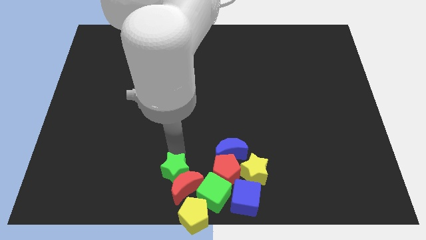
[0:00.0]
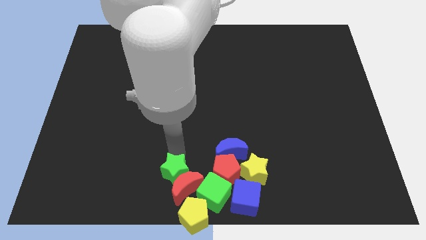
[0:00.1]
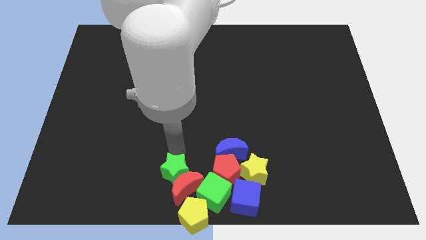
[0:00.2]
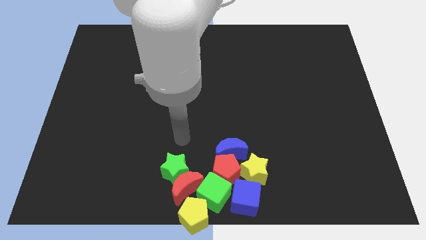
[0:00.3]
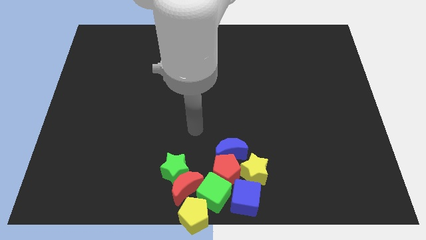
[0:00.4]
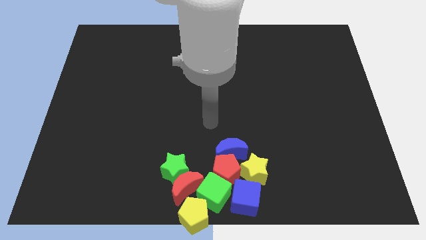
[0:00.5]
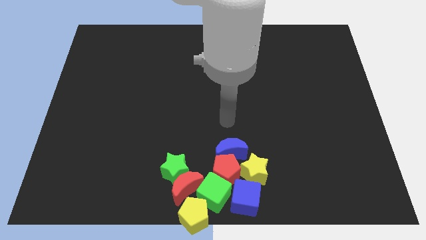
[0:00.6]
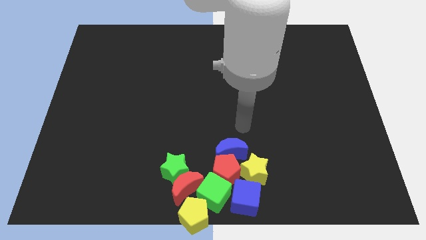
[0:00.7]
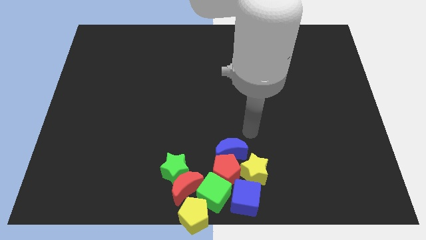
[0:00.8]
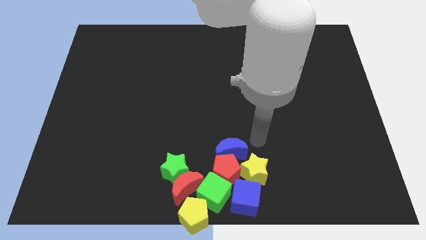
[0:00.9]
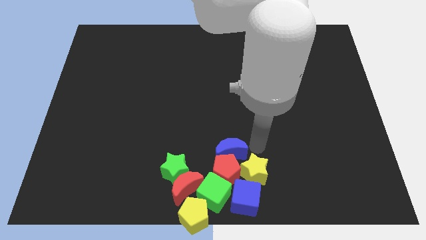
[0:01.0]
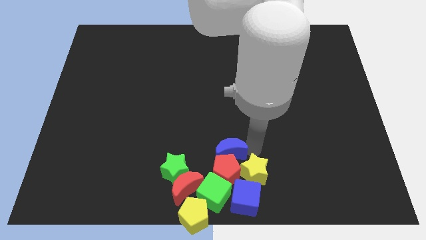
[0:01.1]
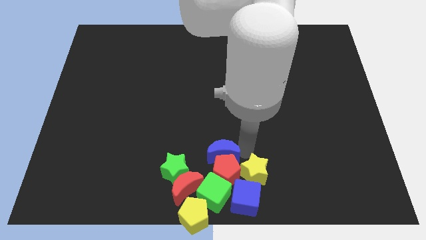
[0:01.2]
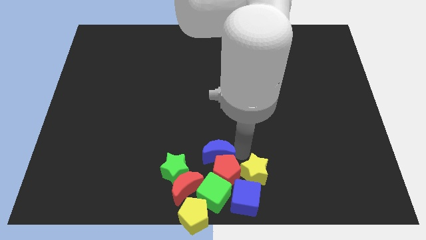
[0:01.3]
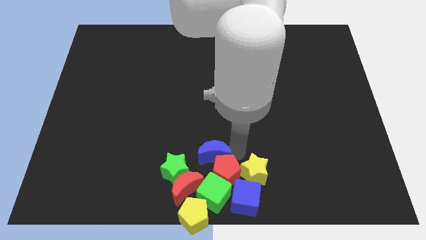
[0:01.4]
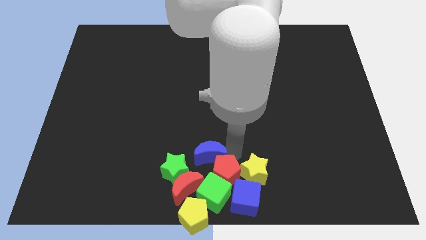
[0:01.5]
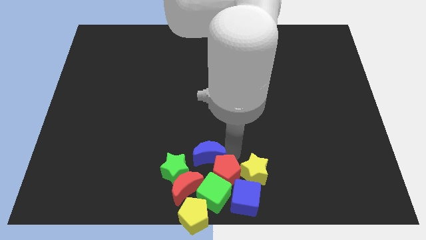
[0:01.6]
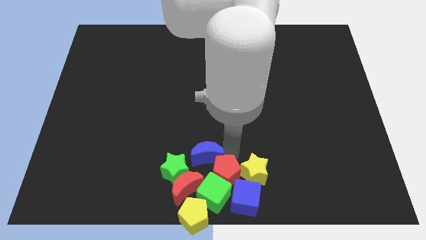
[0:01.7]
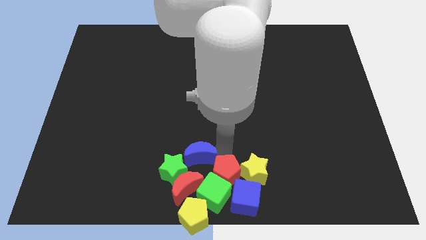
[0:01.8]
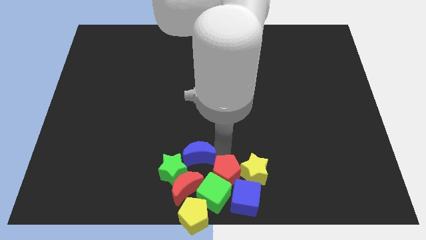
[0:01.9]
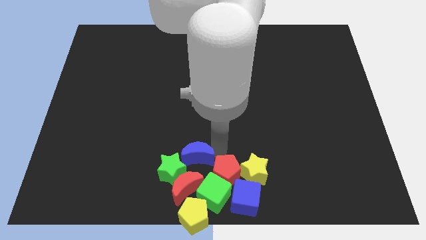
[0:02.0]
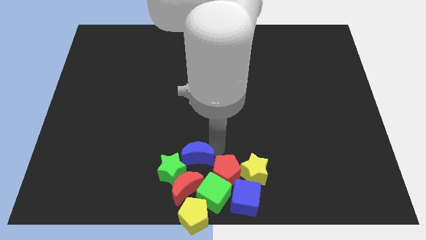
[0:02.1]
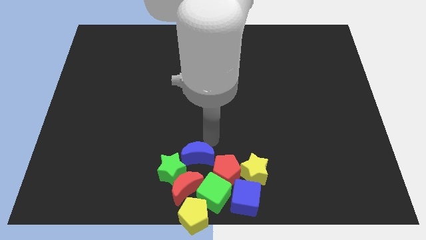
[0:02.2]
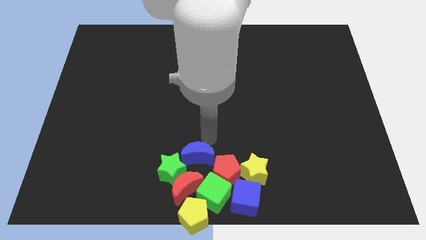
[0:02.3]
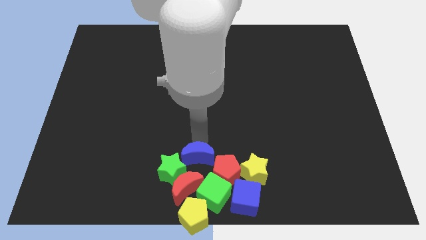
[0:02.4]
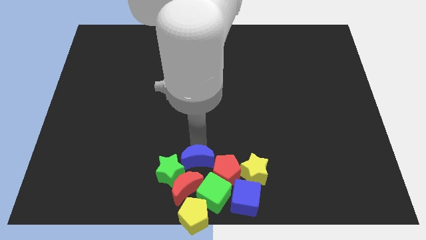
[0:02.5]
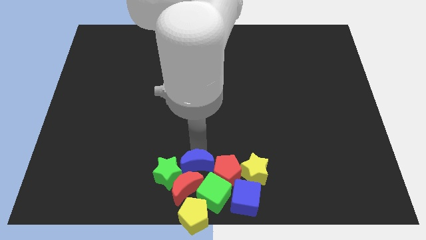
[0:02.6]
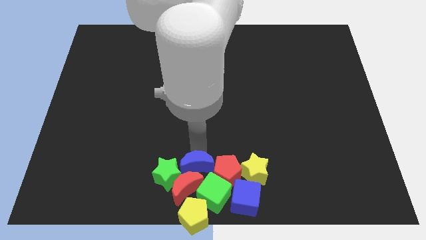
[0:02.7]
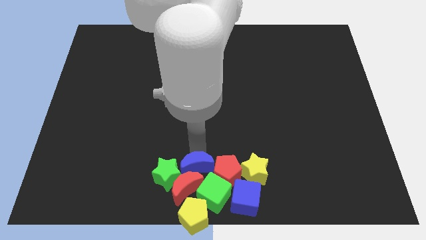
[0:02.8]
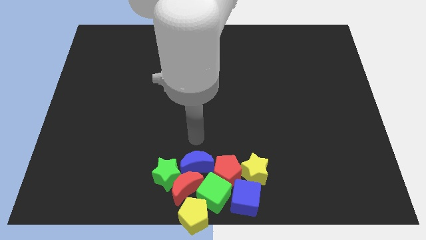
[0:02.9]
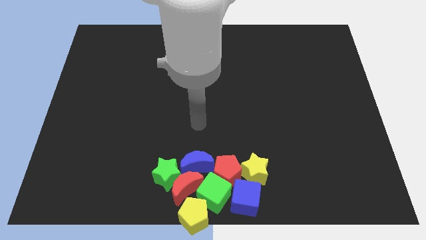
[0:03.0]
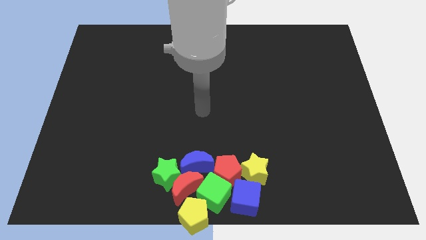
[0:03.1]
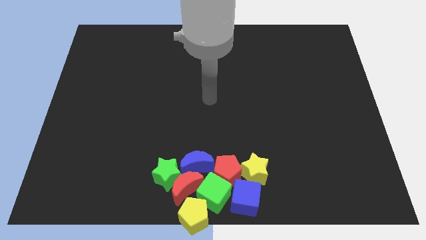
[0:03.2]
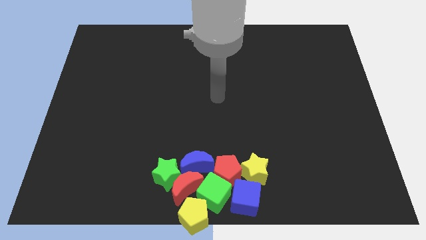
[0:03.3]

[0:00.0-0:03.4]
push the blue crescent into the right side of the green sar

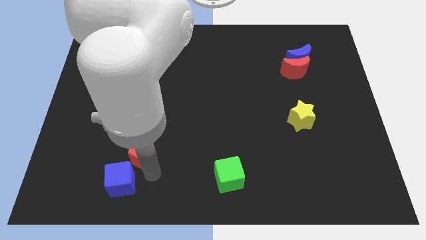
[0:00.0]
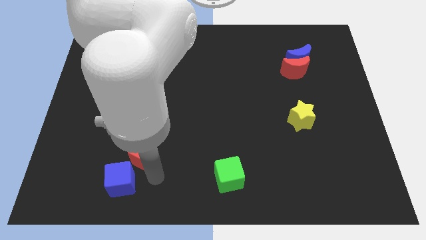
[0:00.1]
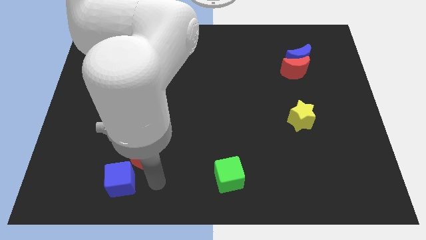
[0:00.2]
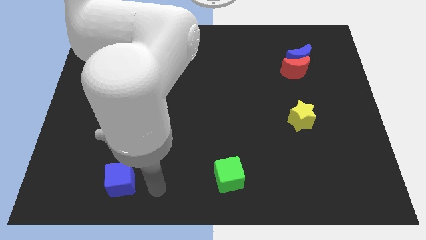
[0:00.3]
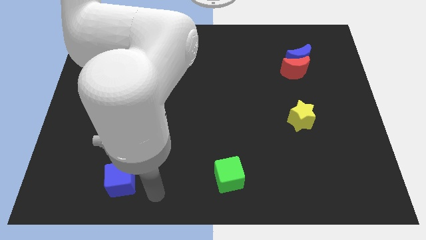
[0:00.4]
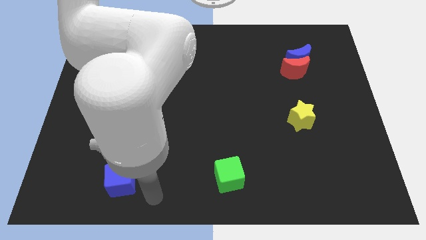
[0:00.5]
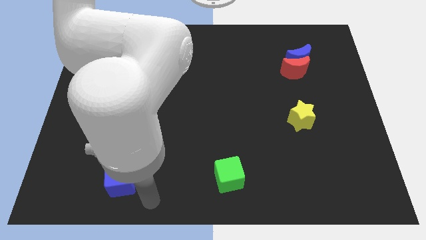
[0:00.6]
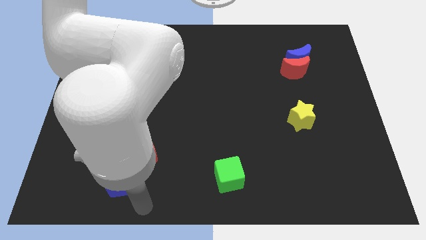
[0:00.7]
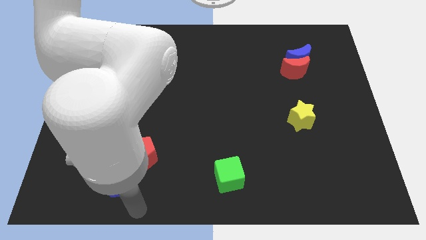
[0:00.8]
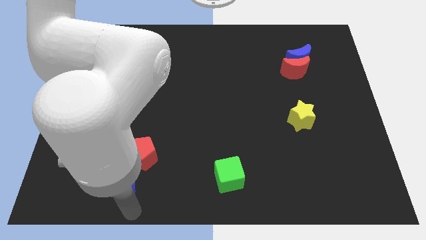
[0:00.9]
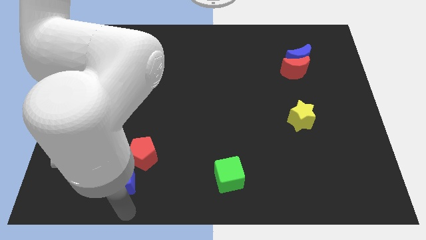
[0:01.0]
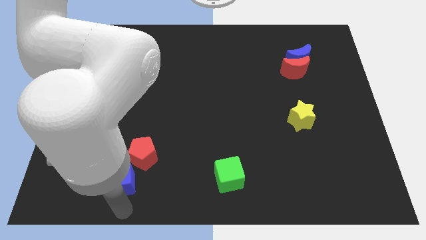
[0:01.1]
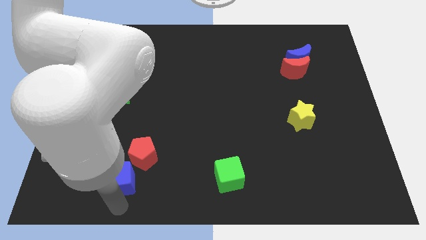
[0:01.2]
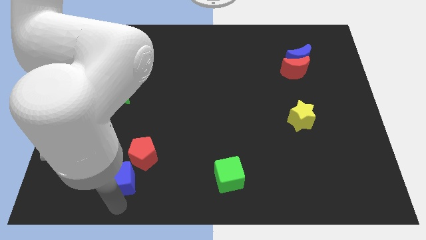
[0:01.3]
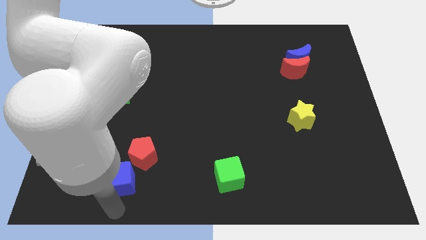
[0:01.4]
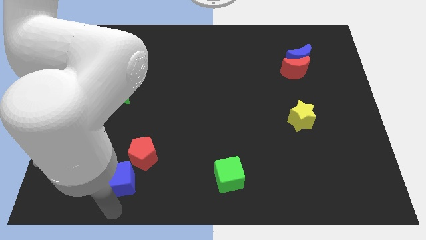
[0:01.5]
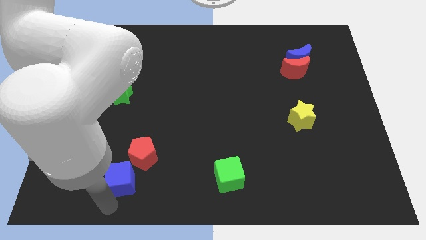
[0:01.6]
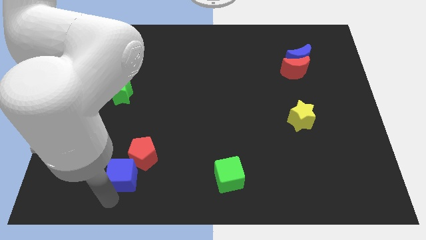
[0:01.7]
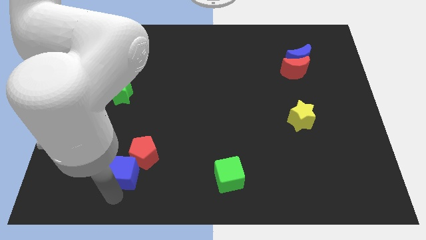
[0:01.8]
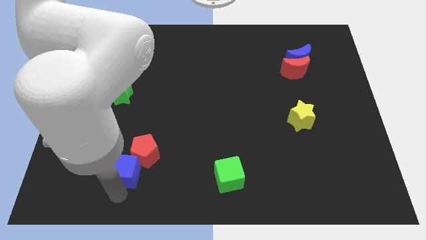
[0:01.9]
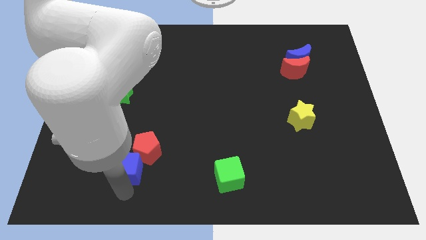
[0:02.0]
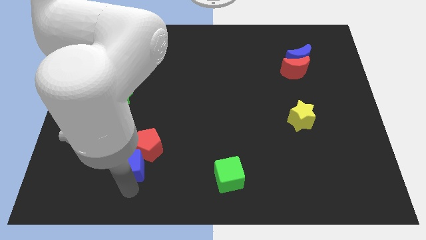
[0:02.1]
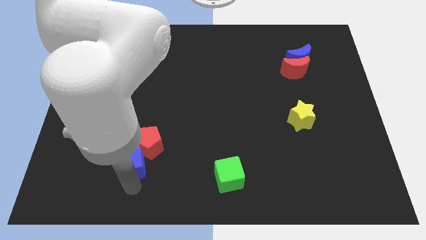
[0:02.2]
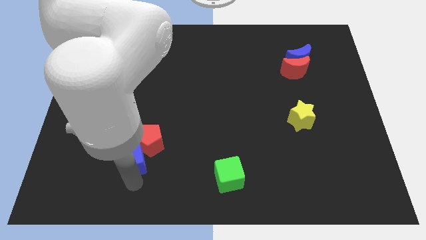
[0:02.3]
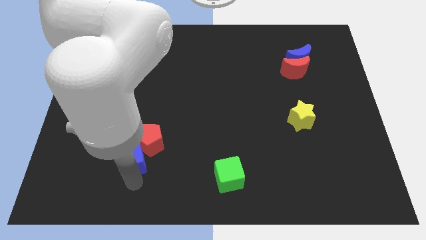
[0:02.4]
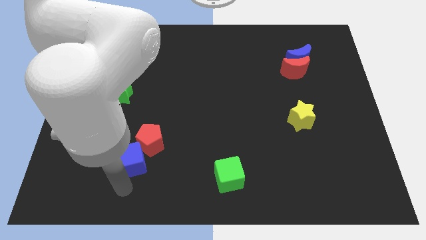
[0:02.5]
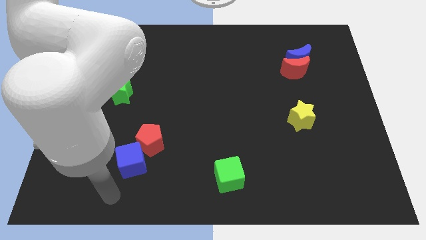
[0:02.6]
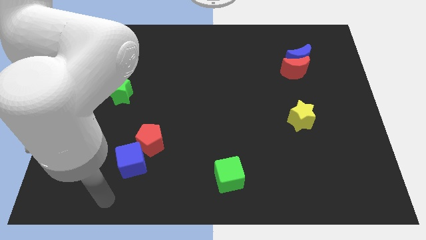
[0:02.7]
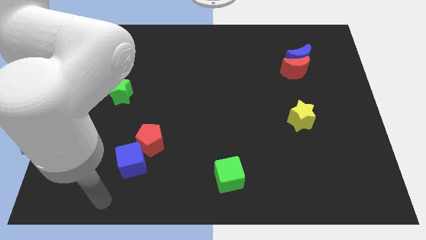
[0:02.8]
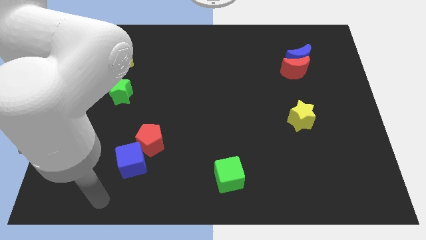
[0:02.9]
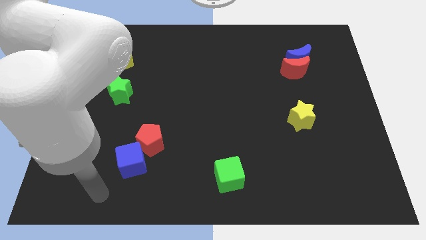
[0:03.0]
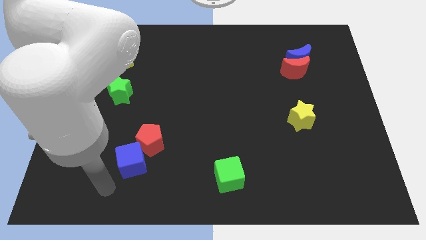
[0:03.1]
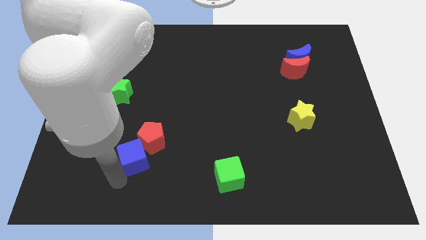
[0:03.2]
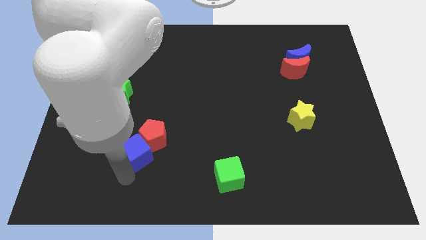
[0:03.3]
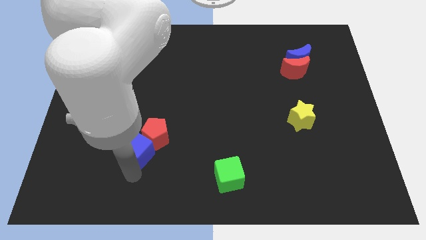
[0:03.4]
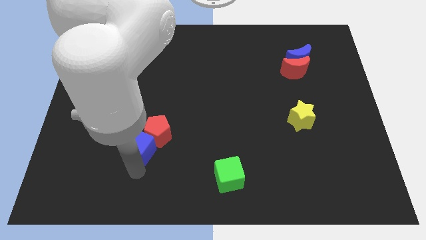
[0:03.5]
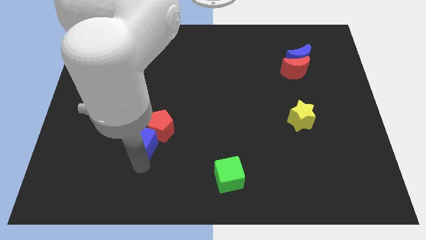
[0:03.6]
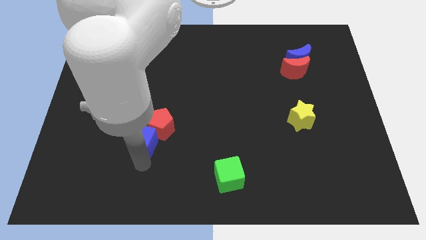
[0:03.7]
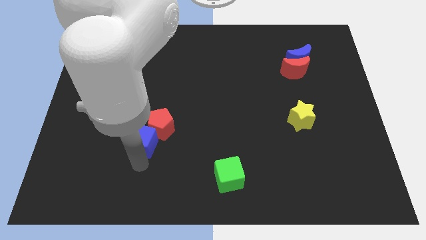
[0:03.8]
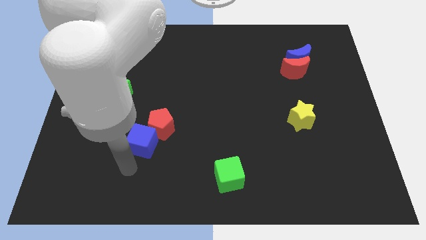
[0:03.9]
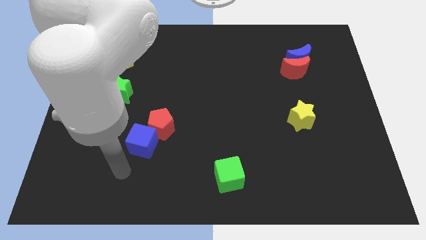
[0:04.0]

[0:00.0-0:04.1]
push the blue cube into the red pentagon

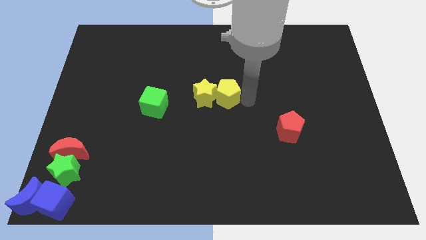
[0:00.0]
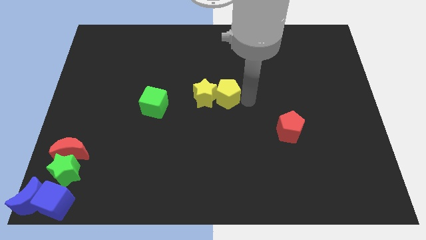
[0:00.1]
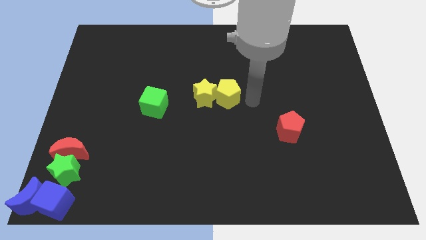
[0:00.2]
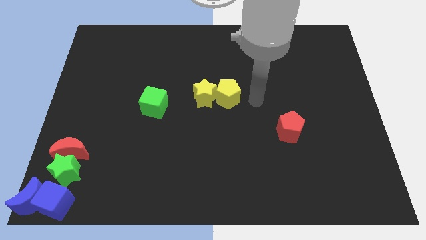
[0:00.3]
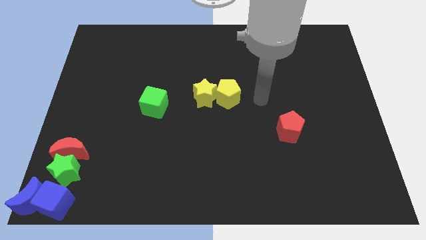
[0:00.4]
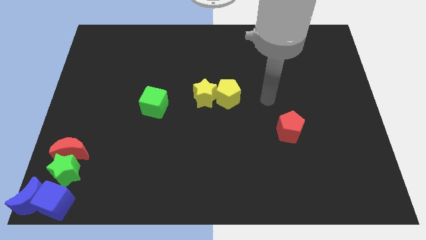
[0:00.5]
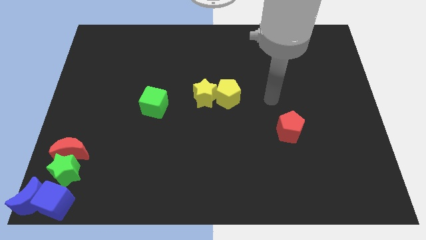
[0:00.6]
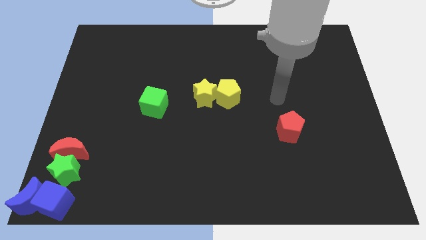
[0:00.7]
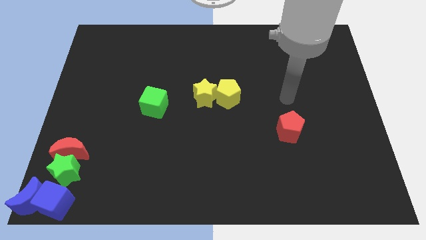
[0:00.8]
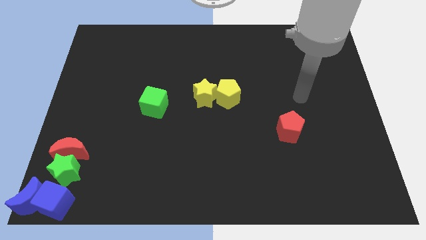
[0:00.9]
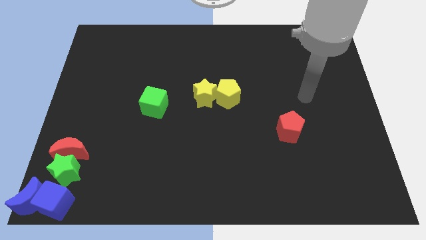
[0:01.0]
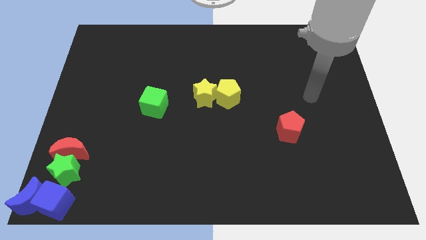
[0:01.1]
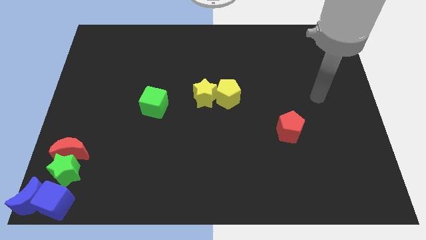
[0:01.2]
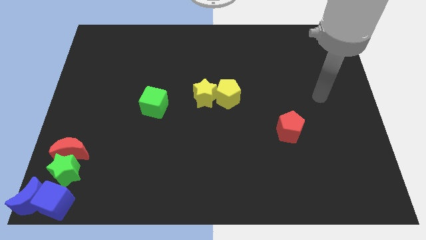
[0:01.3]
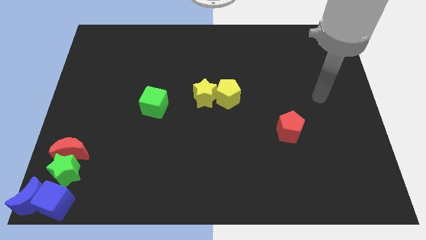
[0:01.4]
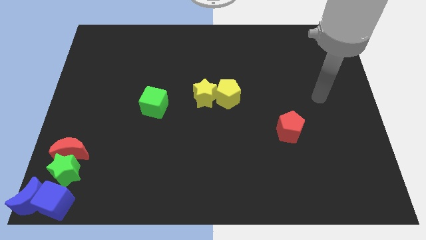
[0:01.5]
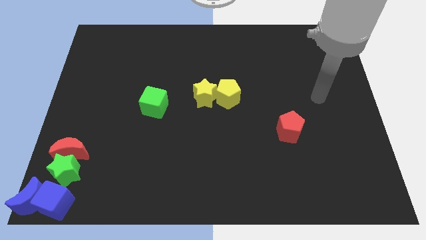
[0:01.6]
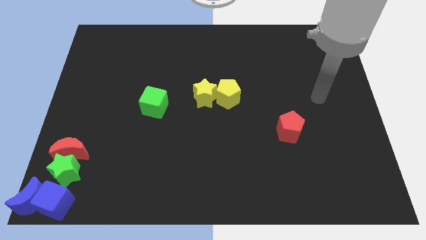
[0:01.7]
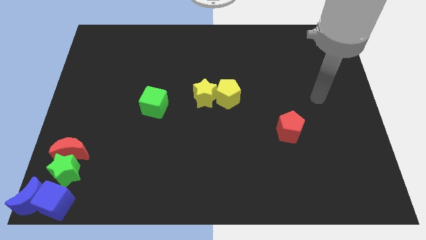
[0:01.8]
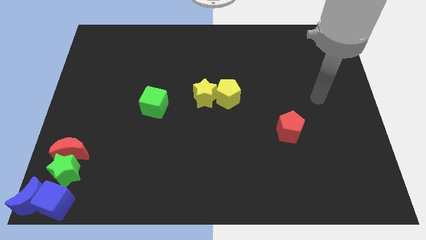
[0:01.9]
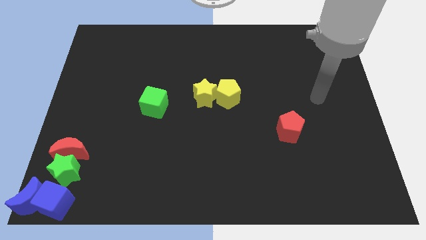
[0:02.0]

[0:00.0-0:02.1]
go away from the yellow pentagon
